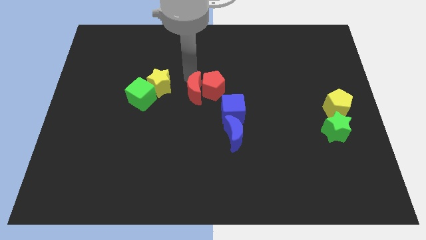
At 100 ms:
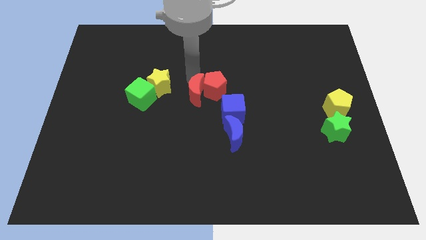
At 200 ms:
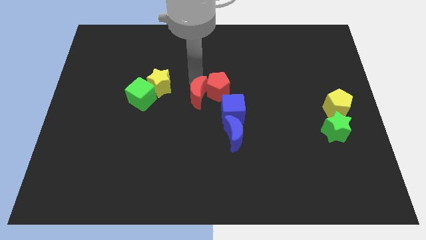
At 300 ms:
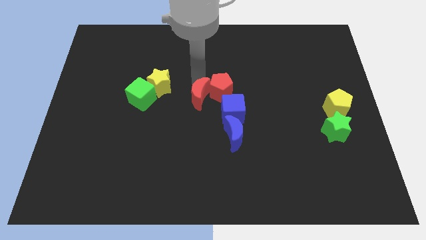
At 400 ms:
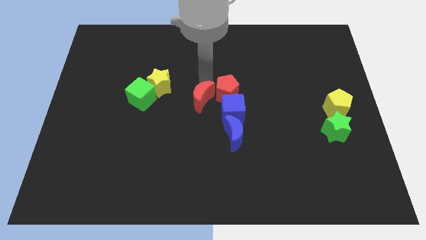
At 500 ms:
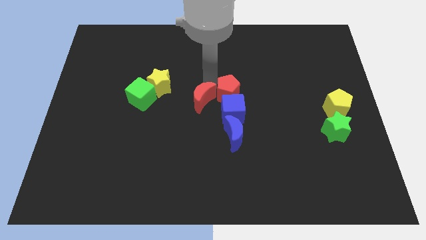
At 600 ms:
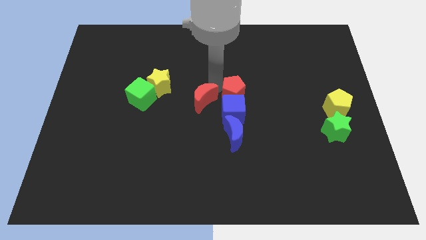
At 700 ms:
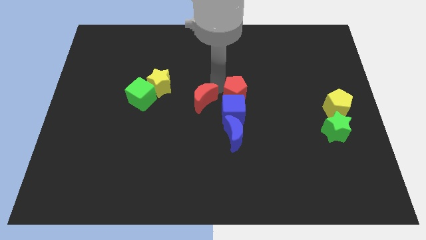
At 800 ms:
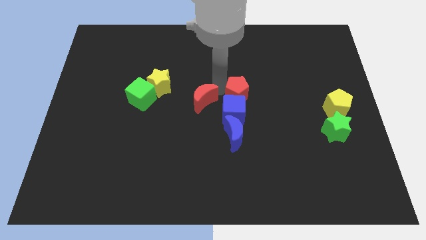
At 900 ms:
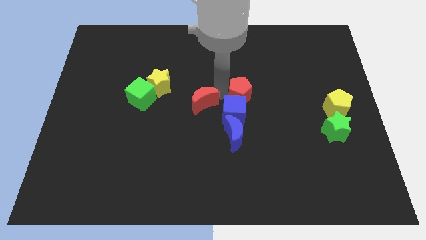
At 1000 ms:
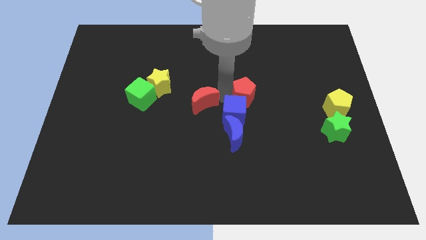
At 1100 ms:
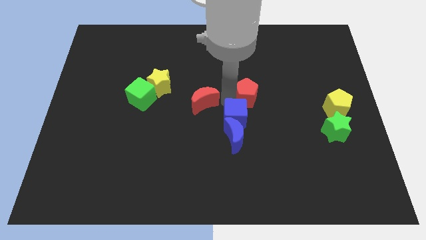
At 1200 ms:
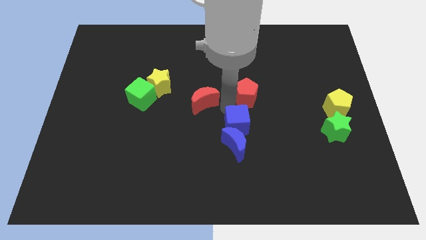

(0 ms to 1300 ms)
separate the group of red blocks

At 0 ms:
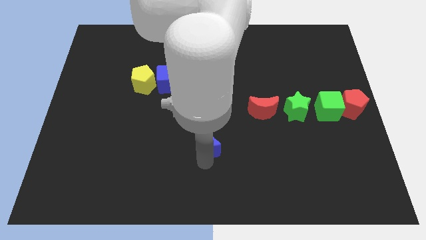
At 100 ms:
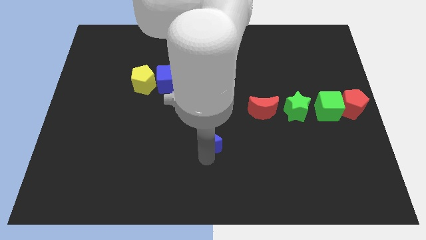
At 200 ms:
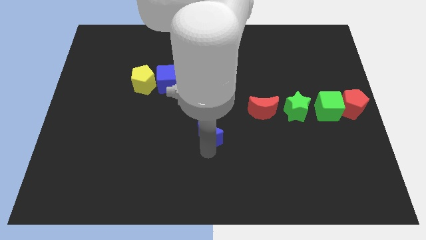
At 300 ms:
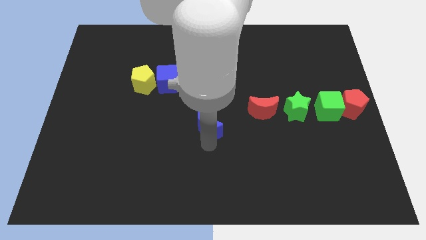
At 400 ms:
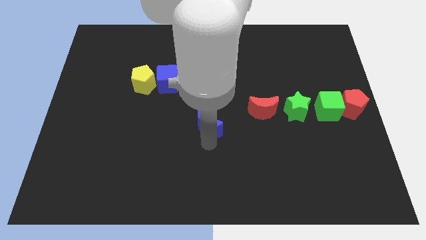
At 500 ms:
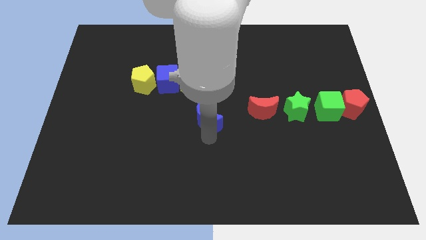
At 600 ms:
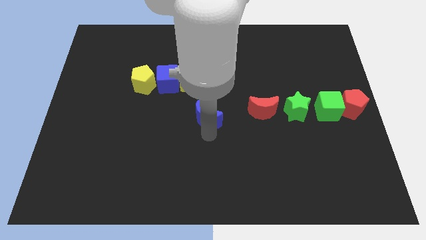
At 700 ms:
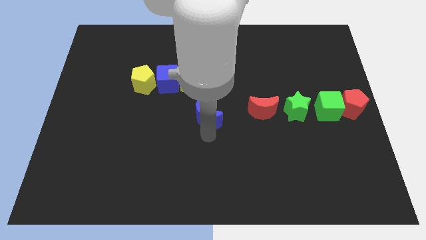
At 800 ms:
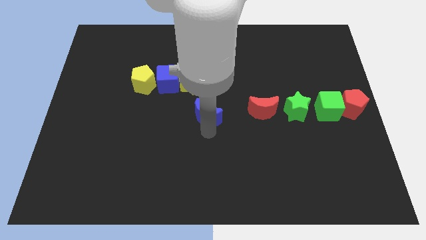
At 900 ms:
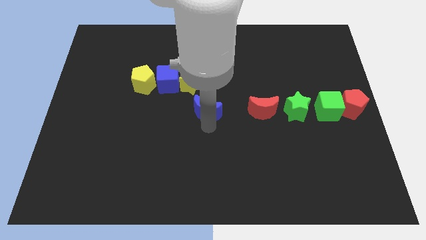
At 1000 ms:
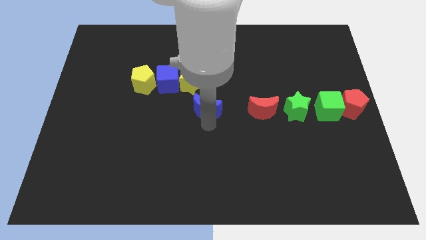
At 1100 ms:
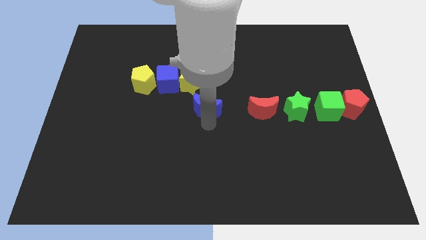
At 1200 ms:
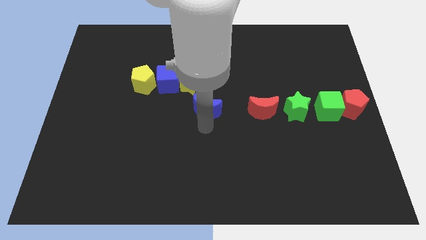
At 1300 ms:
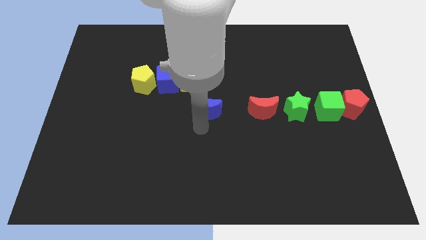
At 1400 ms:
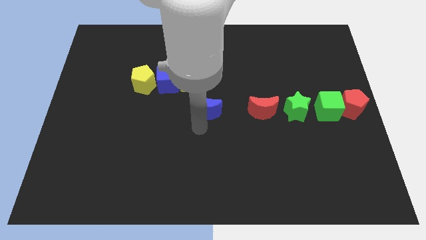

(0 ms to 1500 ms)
move the blue moon left to the red moon

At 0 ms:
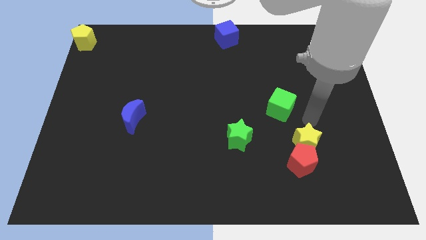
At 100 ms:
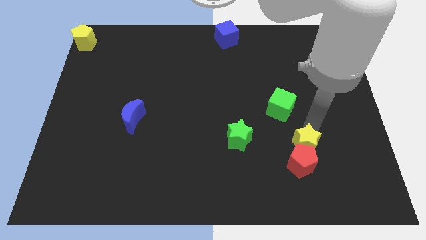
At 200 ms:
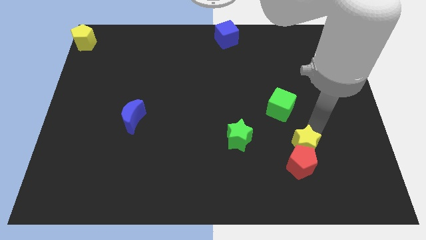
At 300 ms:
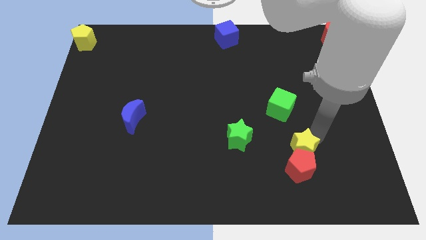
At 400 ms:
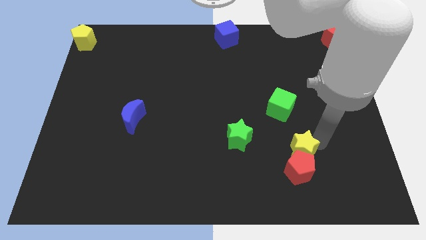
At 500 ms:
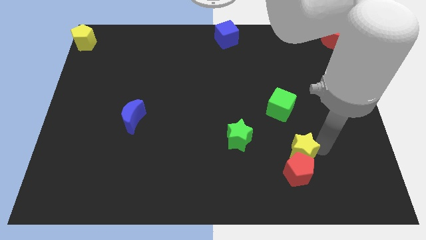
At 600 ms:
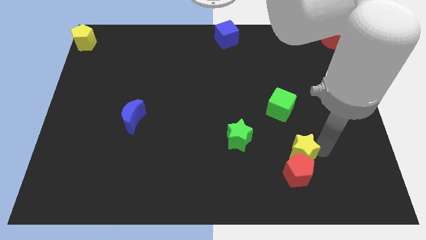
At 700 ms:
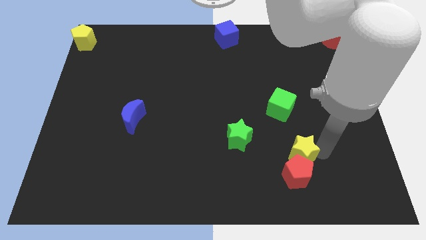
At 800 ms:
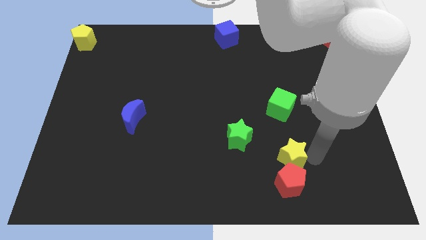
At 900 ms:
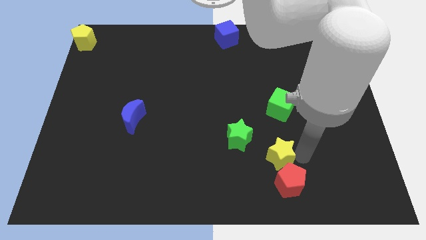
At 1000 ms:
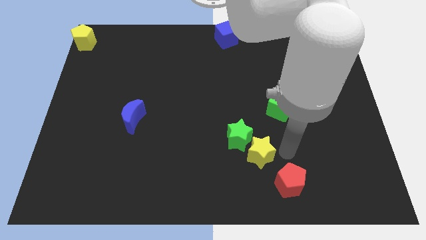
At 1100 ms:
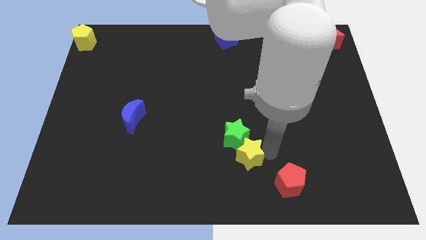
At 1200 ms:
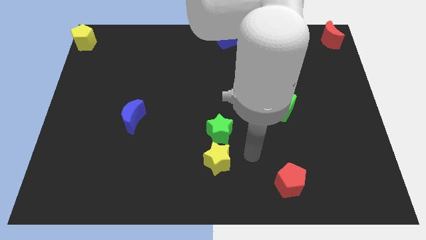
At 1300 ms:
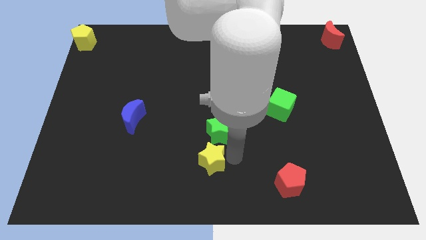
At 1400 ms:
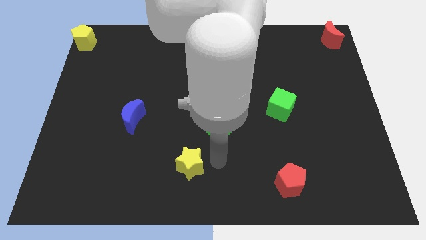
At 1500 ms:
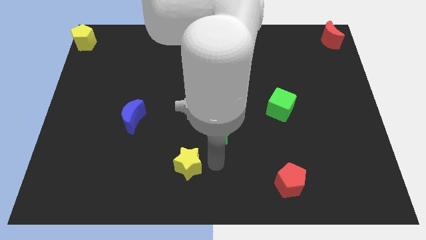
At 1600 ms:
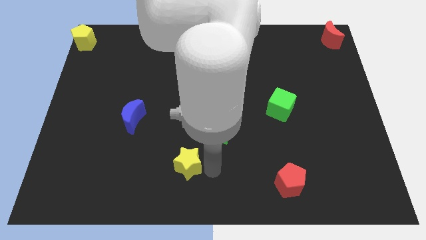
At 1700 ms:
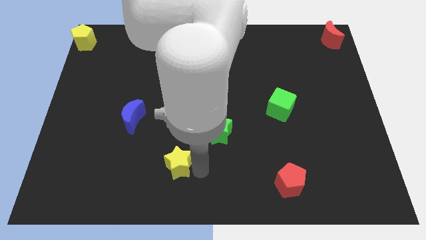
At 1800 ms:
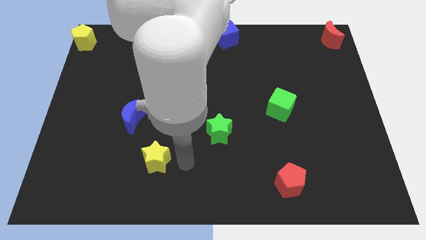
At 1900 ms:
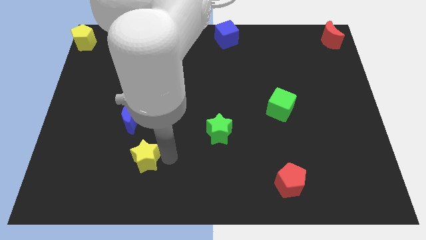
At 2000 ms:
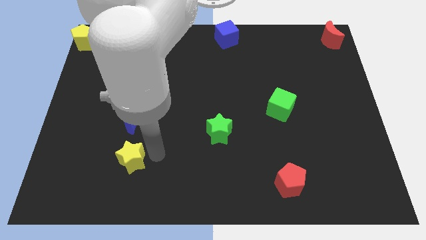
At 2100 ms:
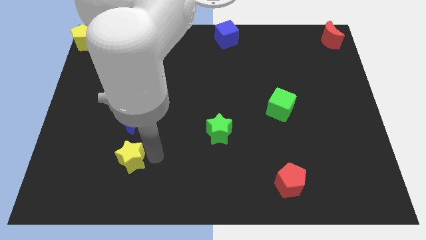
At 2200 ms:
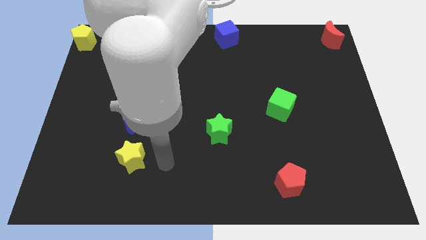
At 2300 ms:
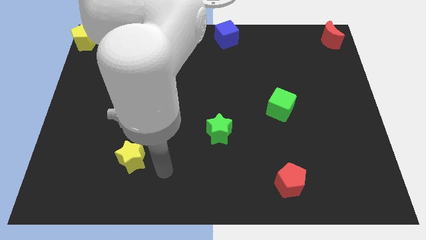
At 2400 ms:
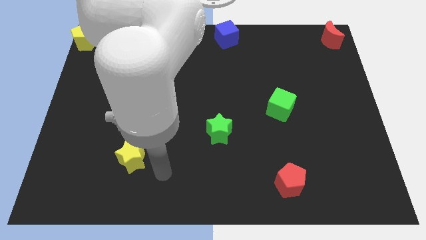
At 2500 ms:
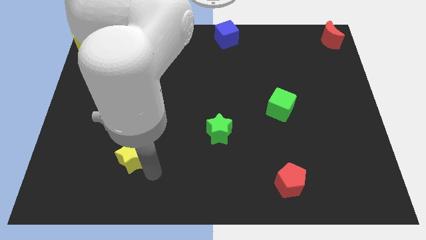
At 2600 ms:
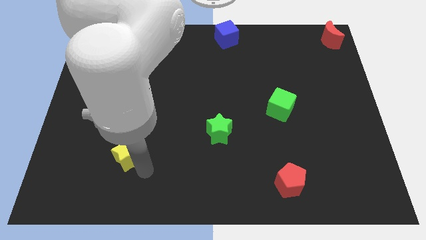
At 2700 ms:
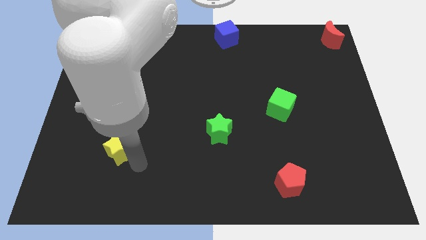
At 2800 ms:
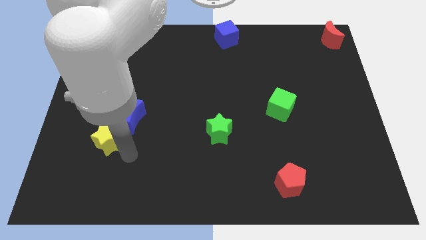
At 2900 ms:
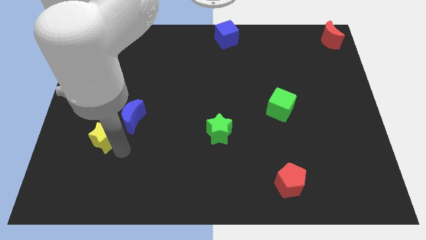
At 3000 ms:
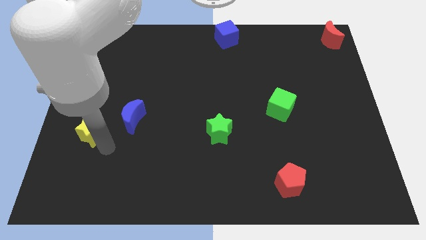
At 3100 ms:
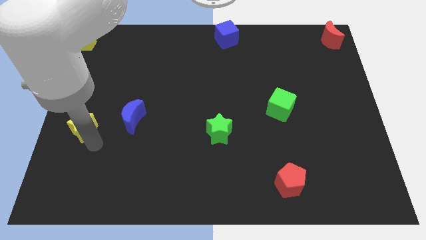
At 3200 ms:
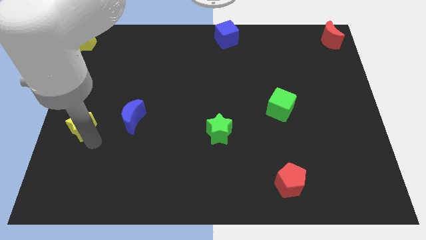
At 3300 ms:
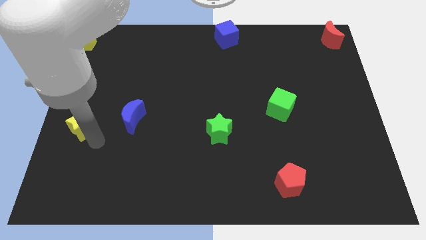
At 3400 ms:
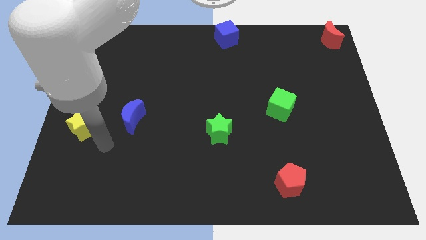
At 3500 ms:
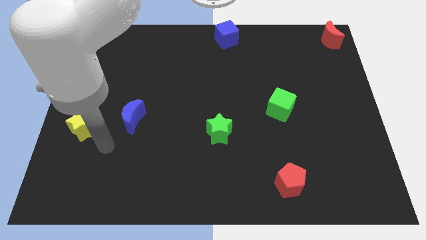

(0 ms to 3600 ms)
push the yellow star to the left of the blue moon

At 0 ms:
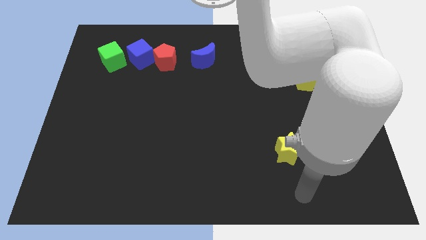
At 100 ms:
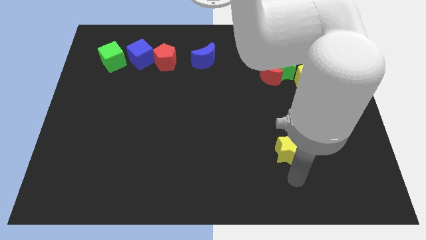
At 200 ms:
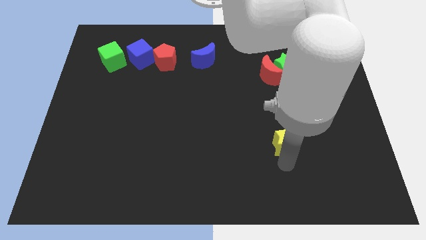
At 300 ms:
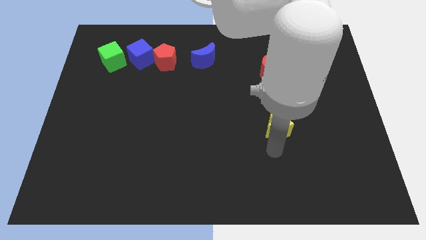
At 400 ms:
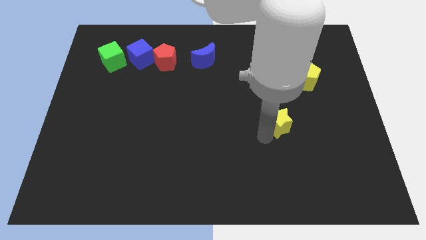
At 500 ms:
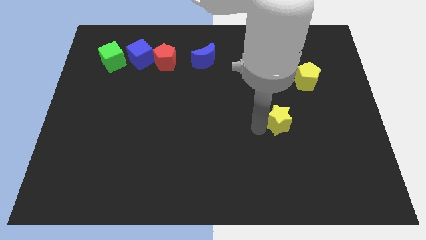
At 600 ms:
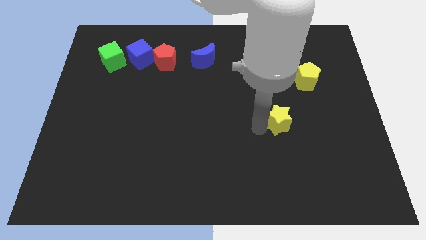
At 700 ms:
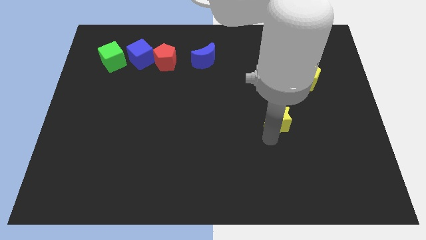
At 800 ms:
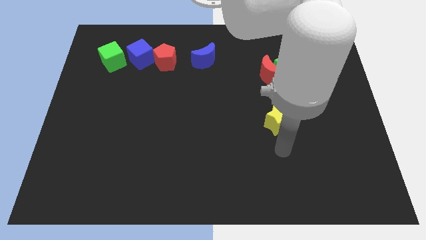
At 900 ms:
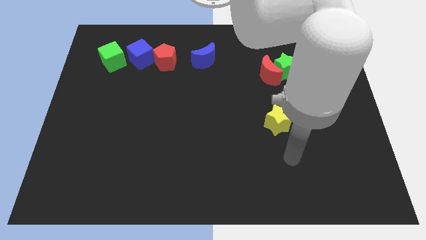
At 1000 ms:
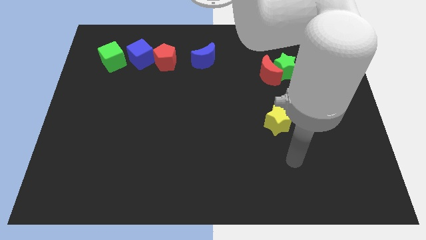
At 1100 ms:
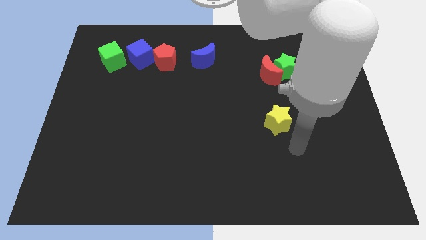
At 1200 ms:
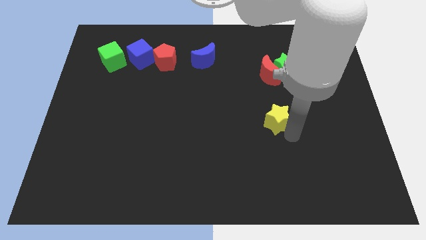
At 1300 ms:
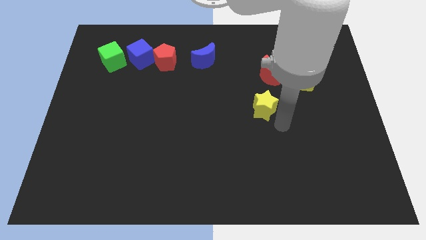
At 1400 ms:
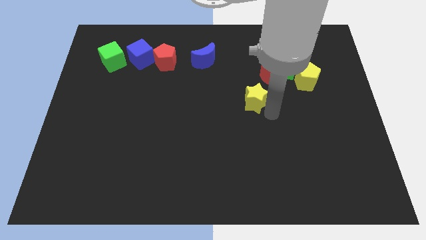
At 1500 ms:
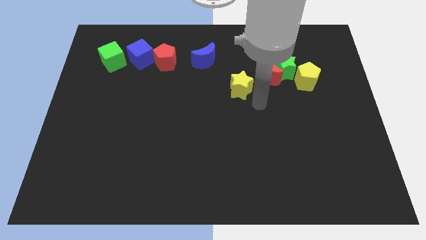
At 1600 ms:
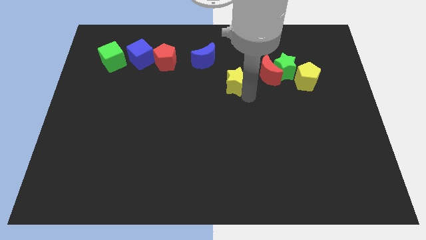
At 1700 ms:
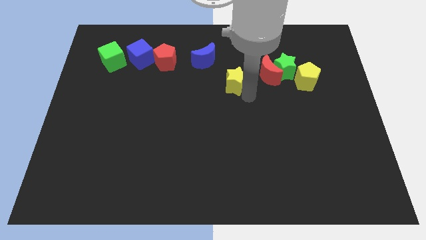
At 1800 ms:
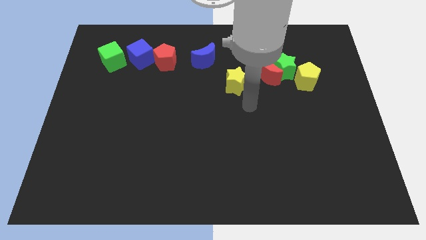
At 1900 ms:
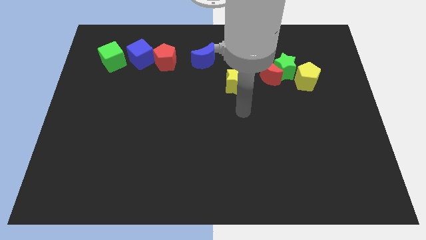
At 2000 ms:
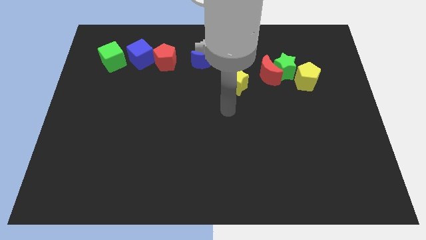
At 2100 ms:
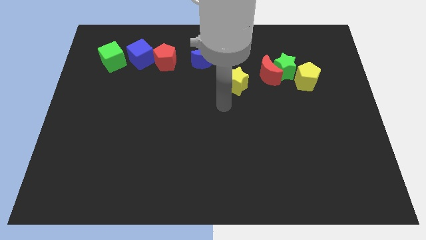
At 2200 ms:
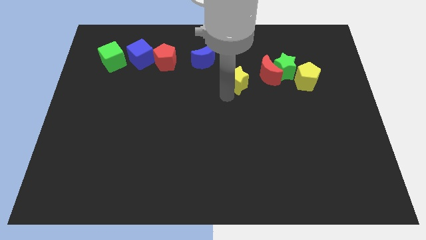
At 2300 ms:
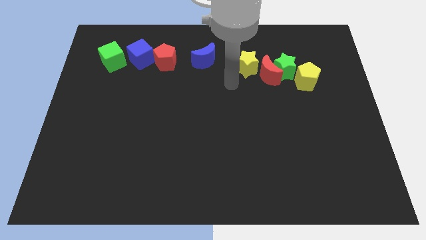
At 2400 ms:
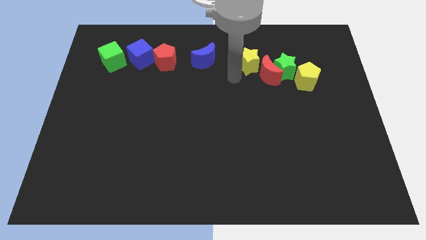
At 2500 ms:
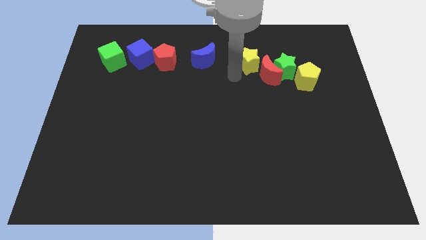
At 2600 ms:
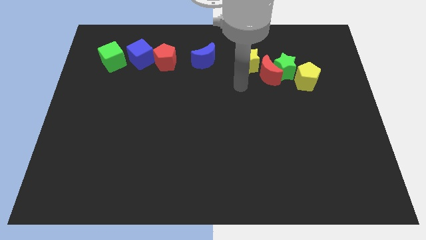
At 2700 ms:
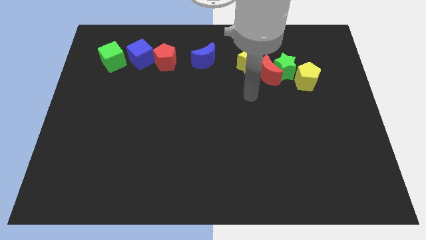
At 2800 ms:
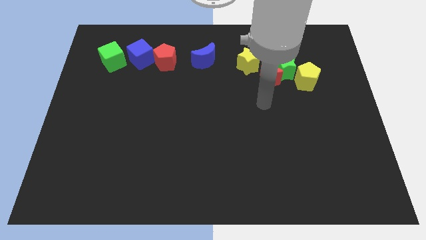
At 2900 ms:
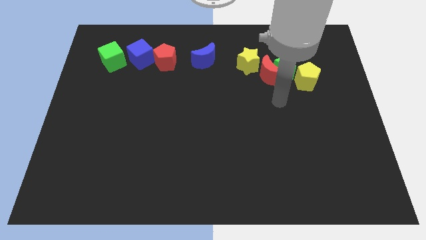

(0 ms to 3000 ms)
take the yellow star to the top left of the red crescent
